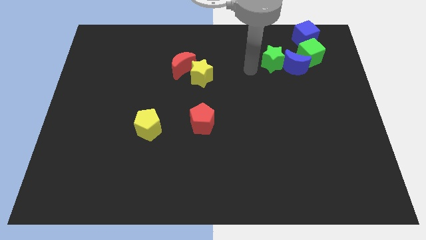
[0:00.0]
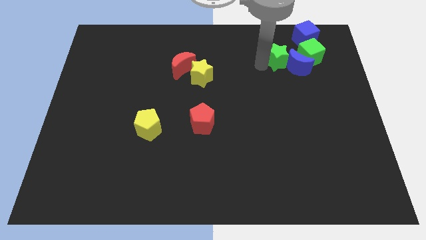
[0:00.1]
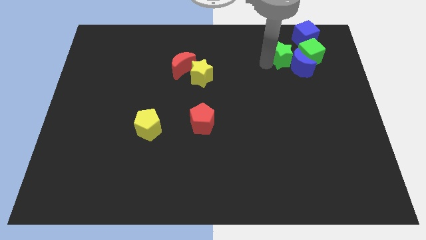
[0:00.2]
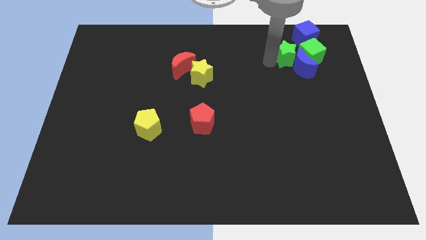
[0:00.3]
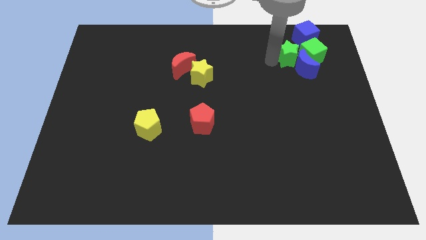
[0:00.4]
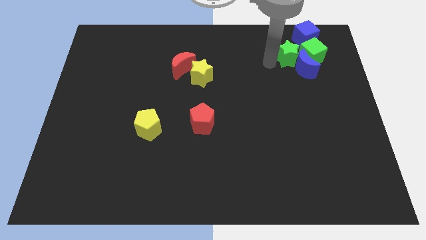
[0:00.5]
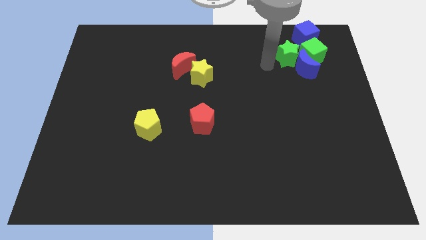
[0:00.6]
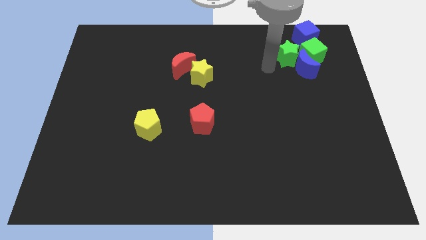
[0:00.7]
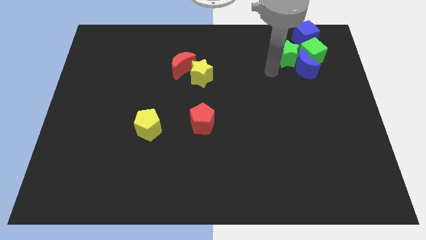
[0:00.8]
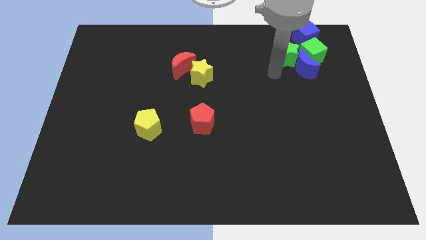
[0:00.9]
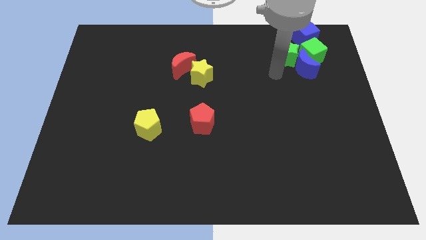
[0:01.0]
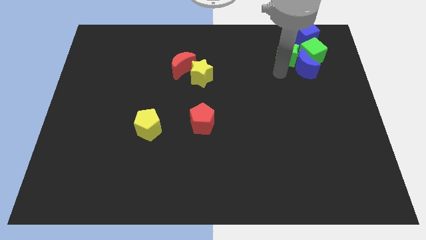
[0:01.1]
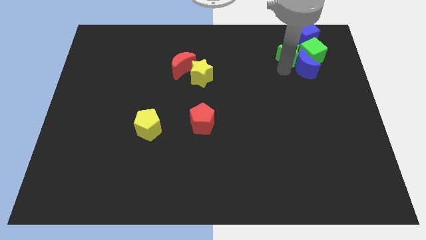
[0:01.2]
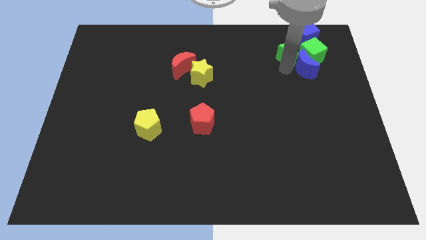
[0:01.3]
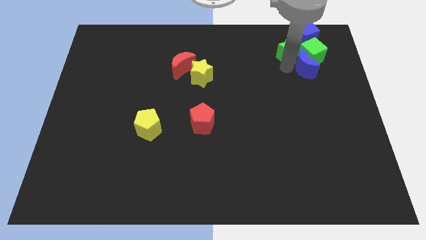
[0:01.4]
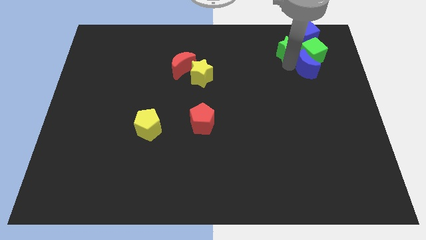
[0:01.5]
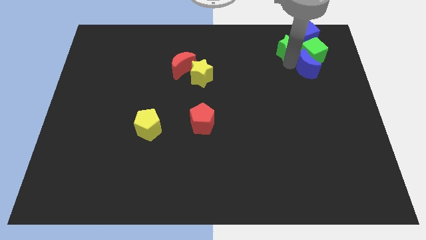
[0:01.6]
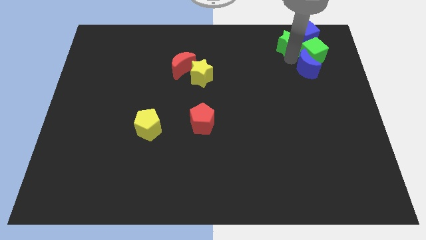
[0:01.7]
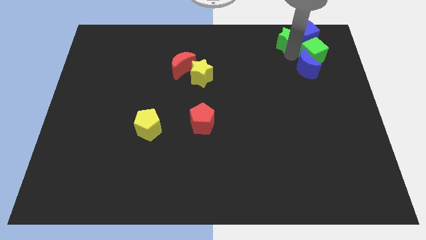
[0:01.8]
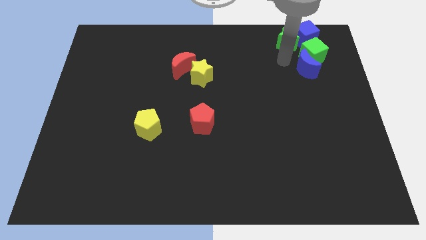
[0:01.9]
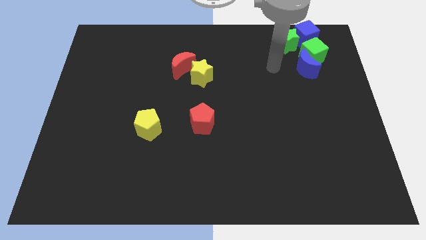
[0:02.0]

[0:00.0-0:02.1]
add the green star to the group of blocks

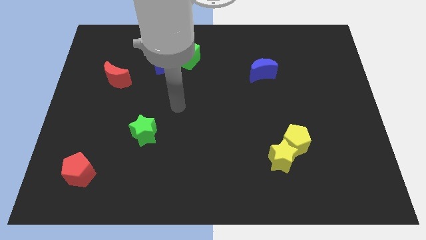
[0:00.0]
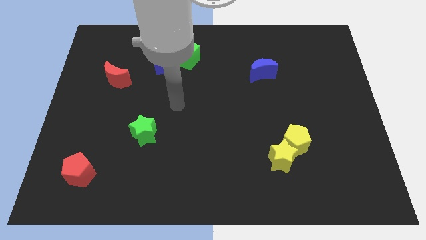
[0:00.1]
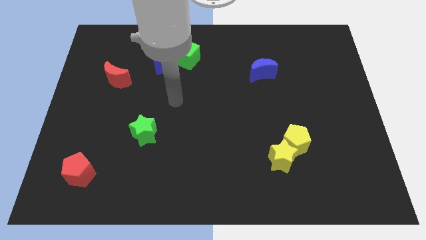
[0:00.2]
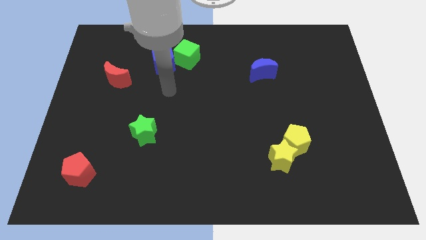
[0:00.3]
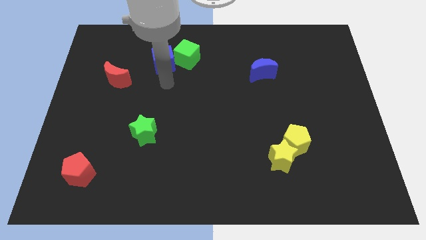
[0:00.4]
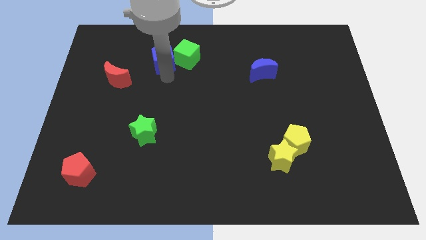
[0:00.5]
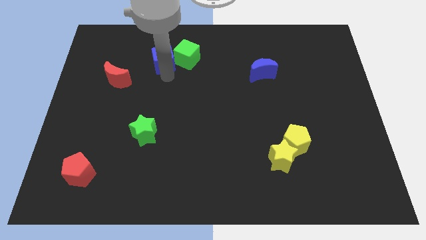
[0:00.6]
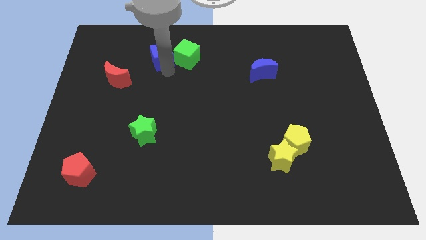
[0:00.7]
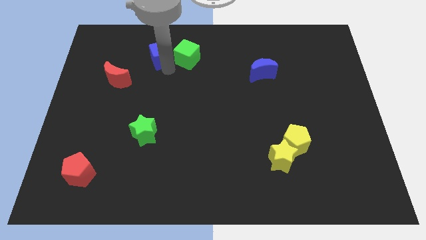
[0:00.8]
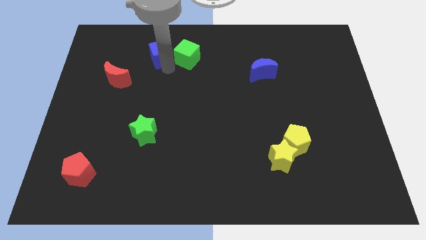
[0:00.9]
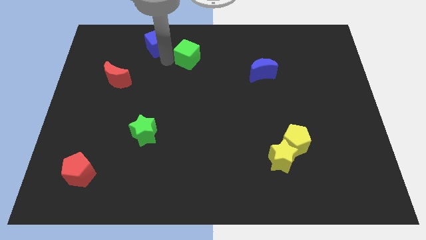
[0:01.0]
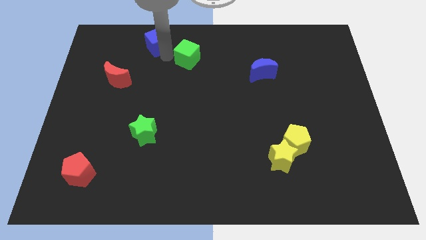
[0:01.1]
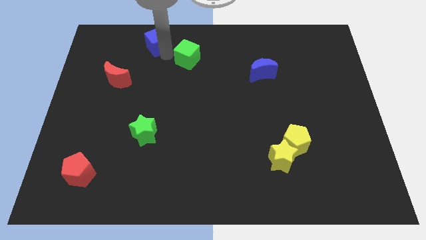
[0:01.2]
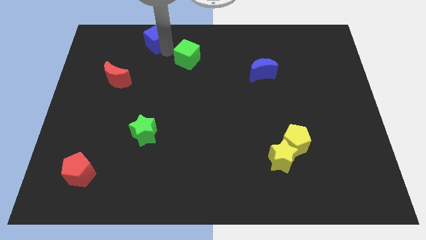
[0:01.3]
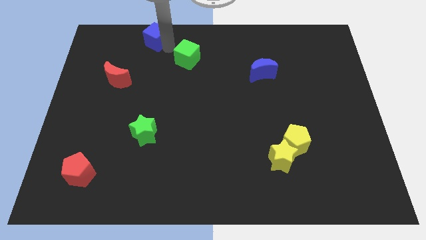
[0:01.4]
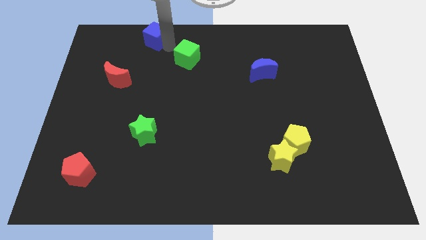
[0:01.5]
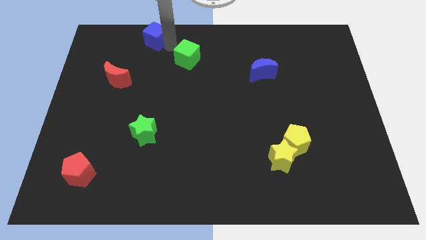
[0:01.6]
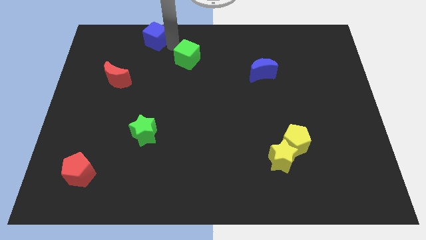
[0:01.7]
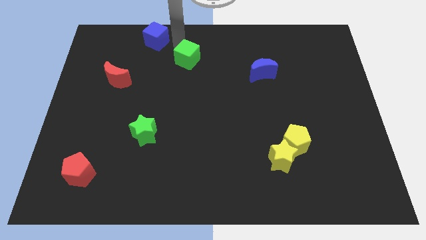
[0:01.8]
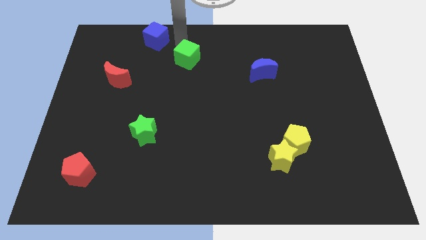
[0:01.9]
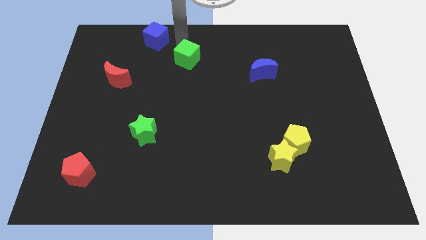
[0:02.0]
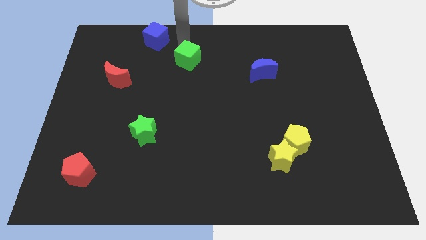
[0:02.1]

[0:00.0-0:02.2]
place blue cube to the top left of green cube

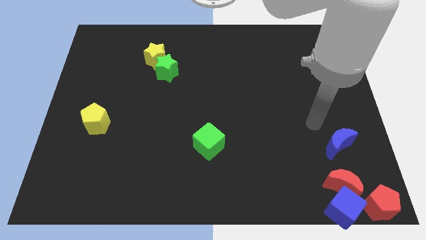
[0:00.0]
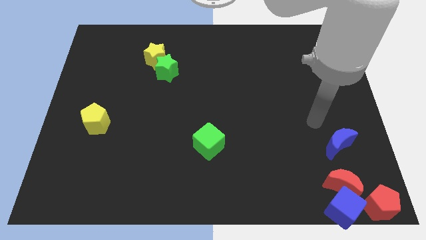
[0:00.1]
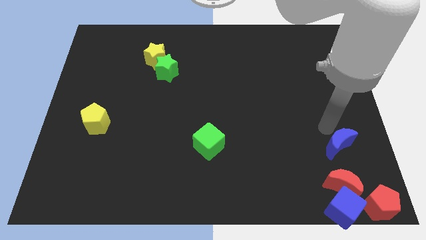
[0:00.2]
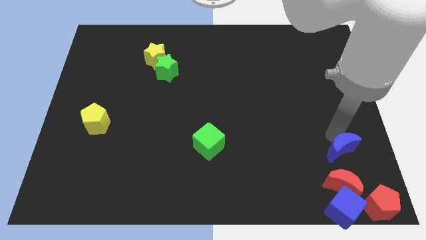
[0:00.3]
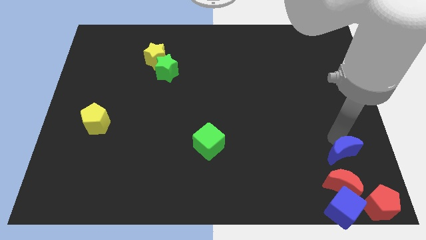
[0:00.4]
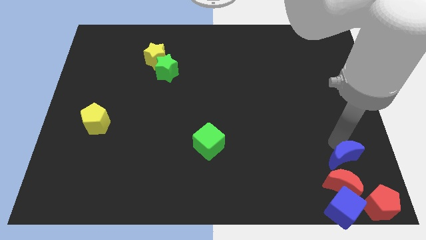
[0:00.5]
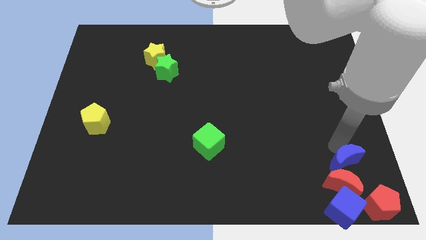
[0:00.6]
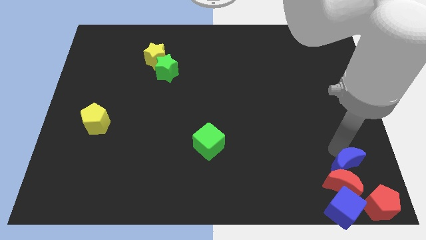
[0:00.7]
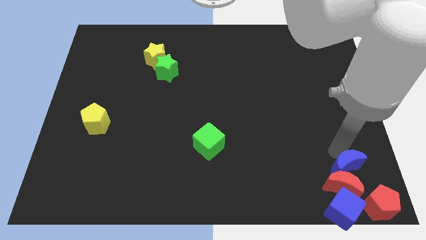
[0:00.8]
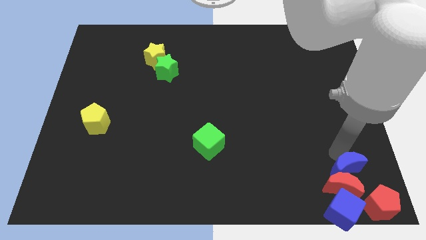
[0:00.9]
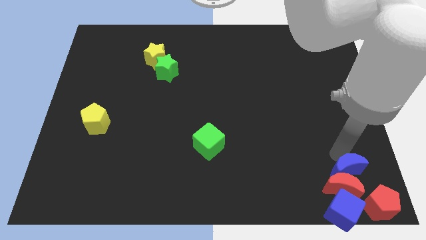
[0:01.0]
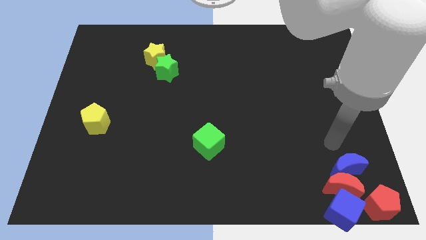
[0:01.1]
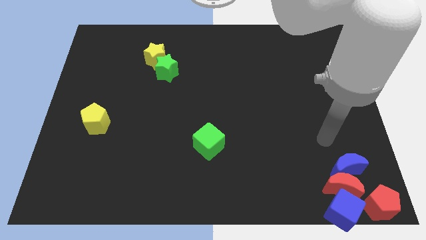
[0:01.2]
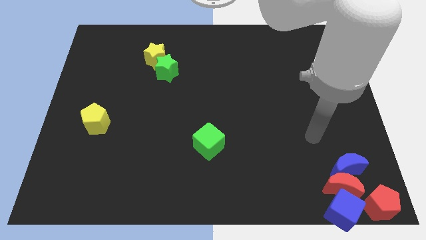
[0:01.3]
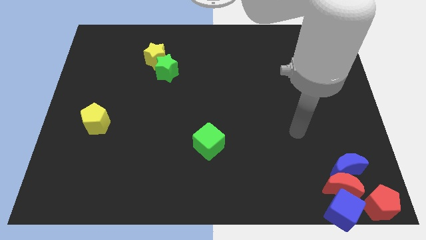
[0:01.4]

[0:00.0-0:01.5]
push the blue moon into the red moon

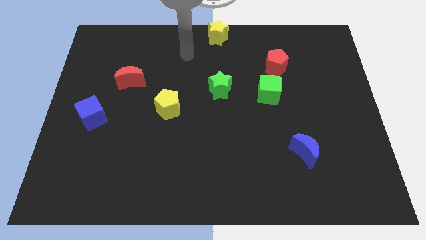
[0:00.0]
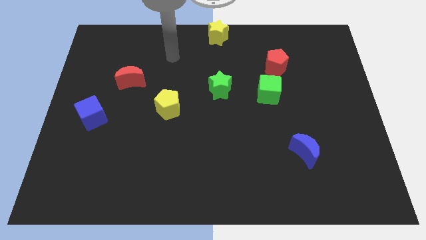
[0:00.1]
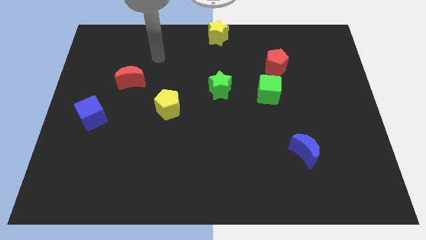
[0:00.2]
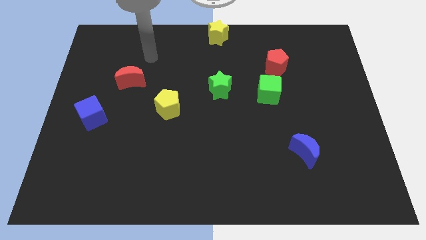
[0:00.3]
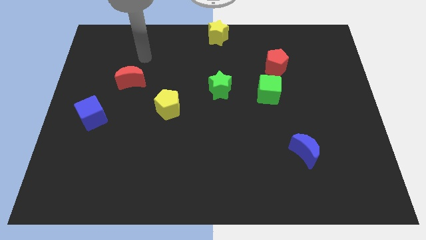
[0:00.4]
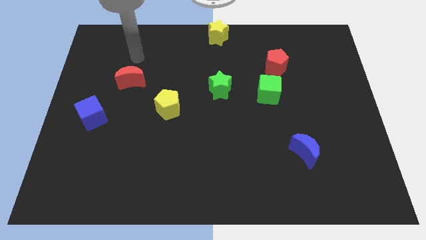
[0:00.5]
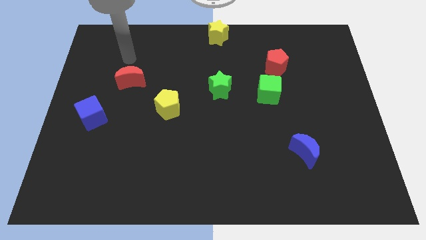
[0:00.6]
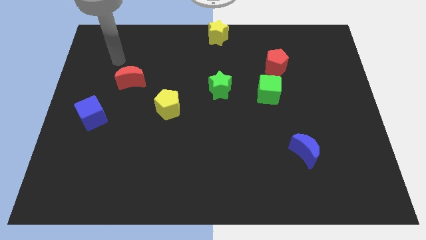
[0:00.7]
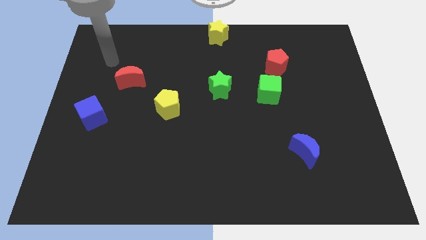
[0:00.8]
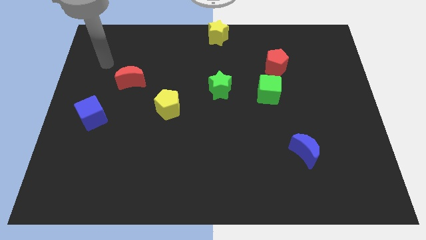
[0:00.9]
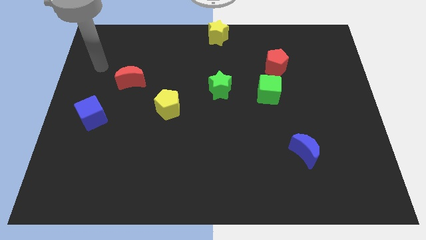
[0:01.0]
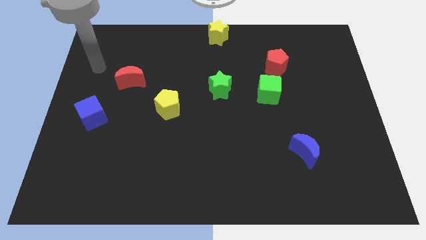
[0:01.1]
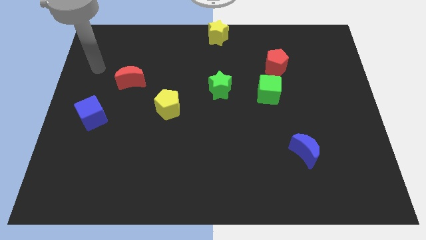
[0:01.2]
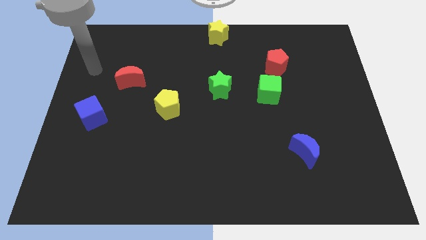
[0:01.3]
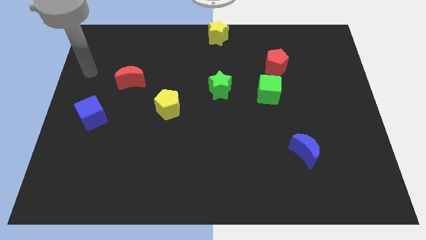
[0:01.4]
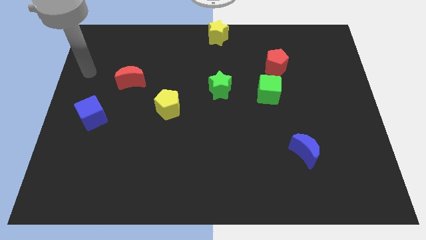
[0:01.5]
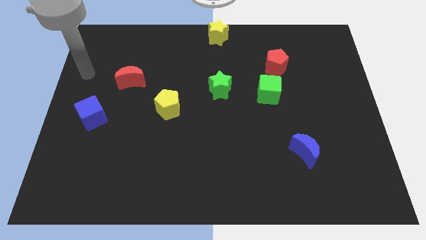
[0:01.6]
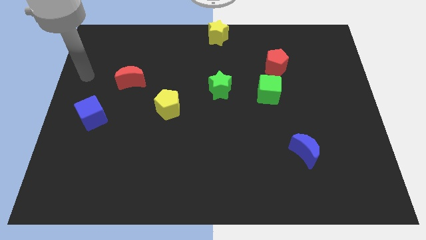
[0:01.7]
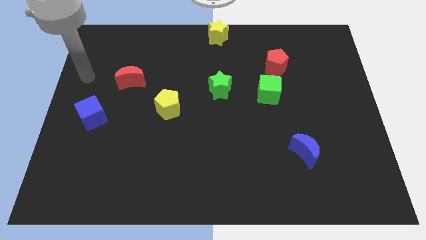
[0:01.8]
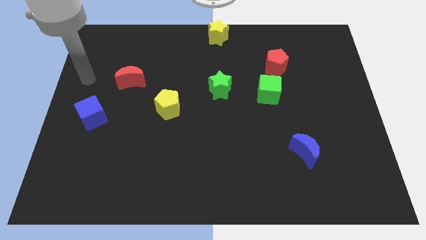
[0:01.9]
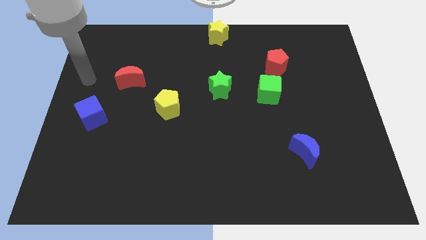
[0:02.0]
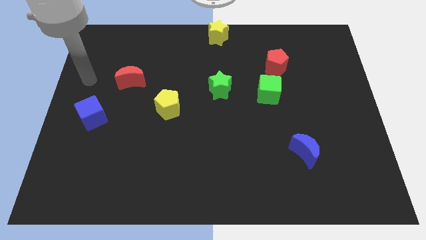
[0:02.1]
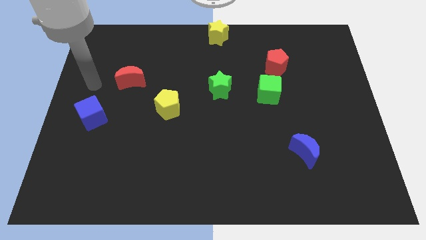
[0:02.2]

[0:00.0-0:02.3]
go and point your hand at the left side of the red crescent

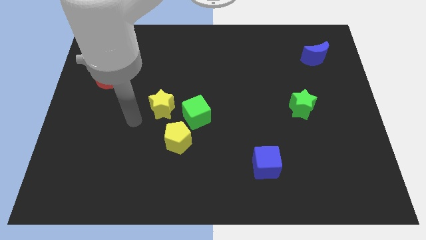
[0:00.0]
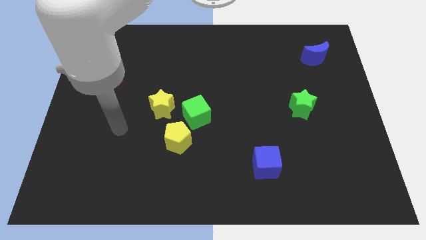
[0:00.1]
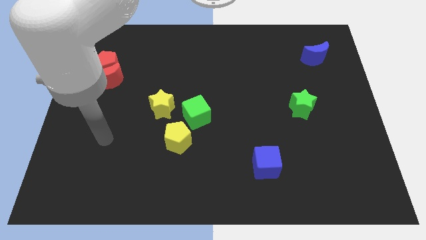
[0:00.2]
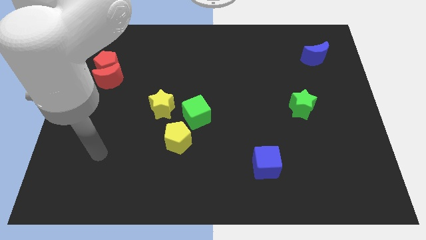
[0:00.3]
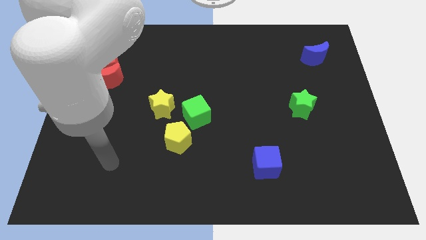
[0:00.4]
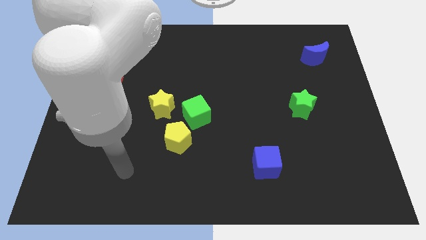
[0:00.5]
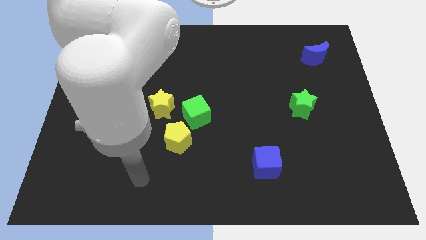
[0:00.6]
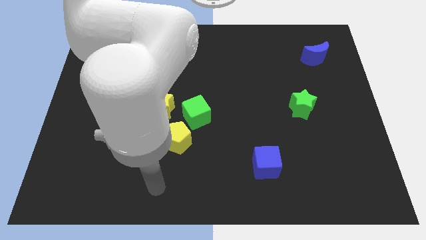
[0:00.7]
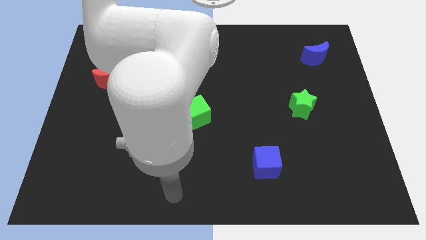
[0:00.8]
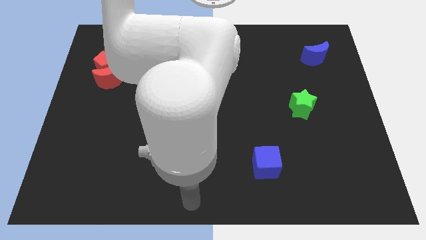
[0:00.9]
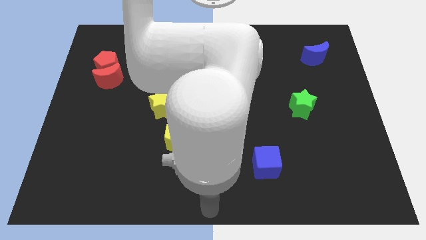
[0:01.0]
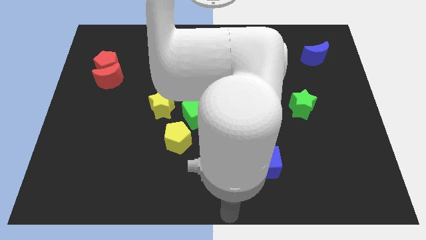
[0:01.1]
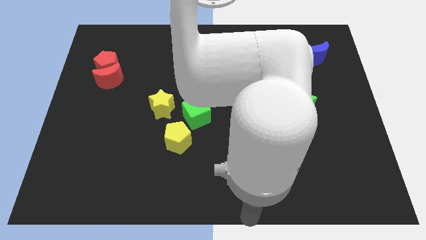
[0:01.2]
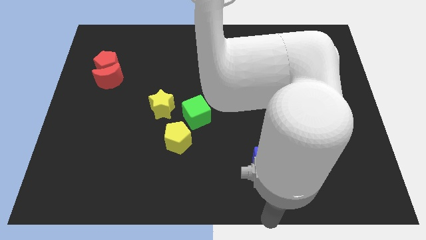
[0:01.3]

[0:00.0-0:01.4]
move your arm away from the yellow star
